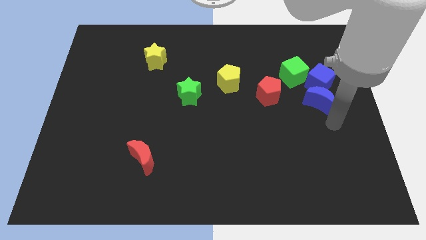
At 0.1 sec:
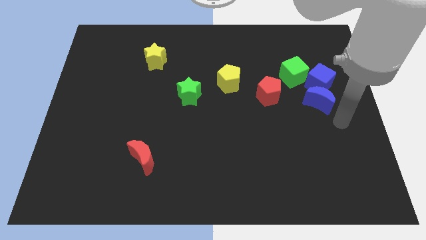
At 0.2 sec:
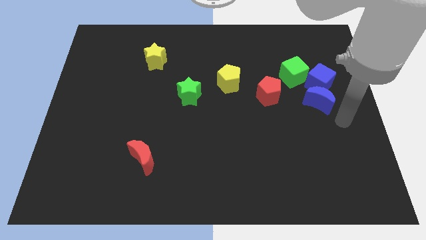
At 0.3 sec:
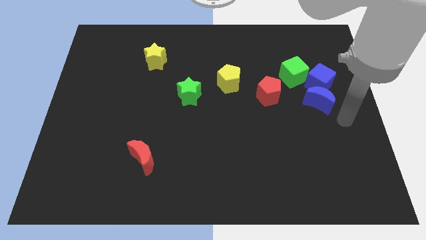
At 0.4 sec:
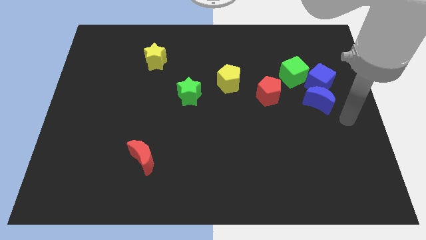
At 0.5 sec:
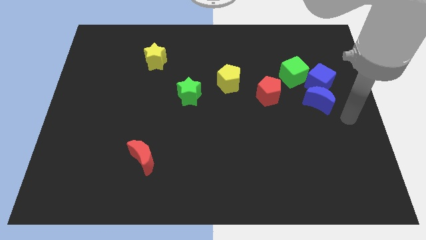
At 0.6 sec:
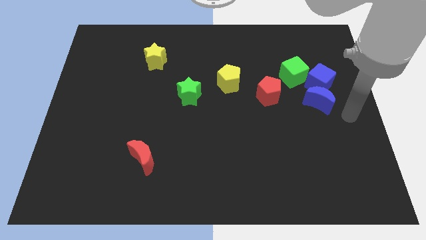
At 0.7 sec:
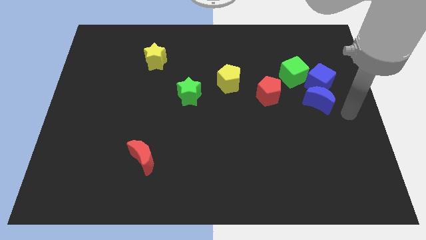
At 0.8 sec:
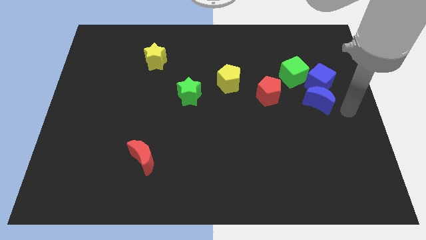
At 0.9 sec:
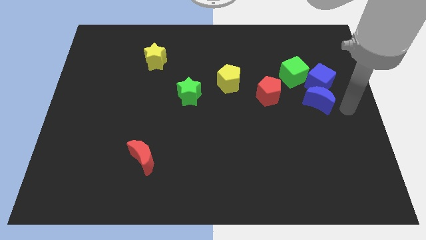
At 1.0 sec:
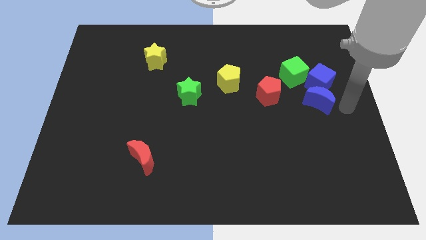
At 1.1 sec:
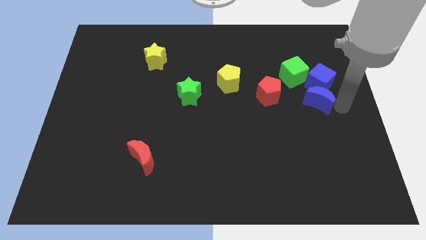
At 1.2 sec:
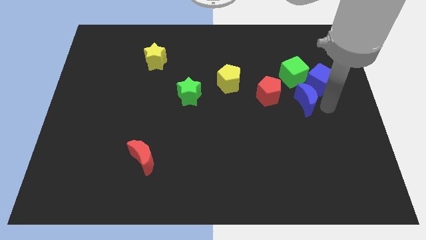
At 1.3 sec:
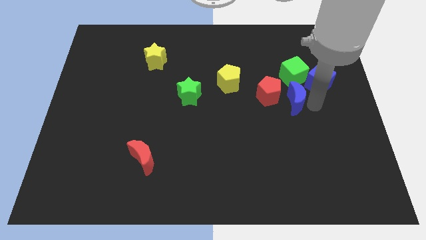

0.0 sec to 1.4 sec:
push blue crescent below green cube

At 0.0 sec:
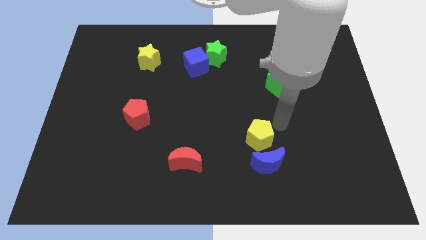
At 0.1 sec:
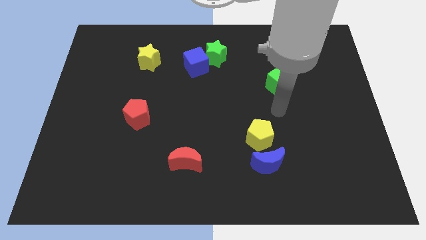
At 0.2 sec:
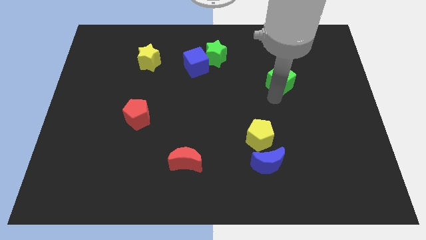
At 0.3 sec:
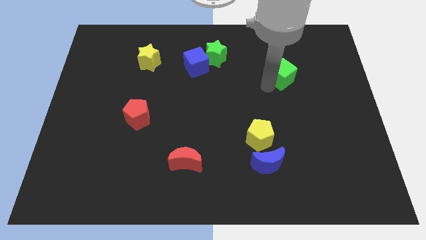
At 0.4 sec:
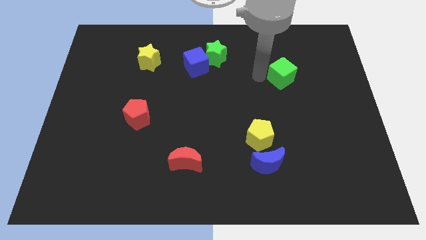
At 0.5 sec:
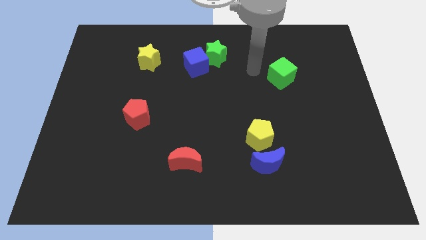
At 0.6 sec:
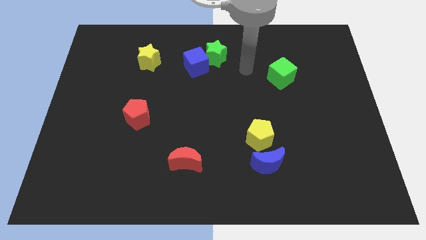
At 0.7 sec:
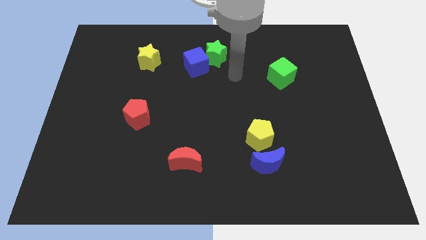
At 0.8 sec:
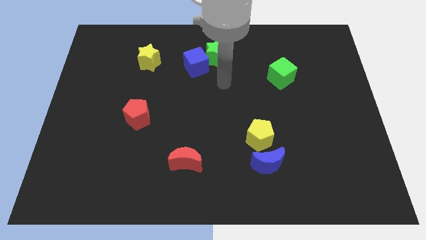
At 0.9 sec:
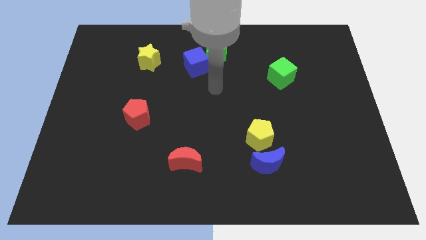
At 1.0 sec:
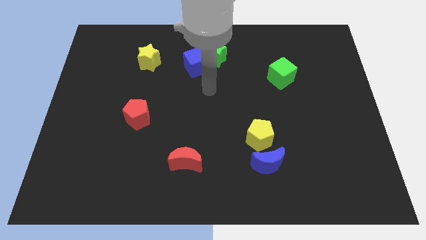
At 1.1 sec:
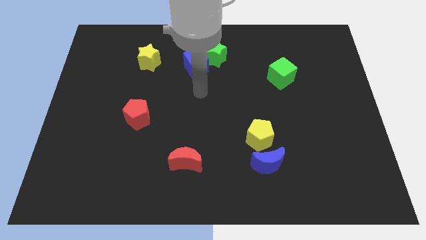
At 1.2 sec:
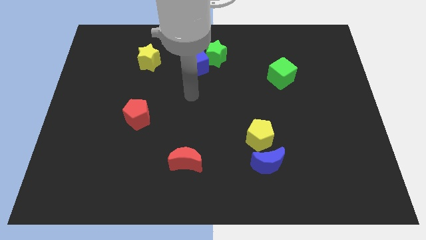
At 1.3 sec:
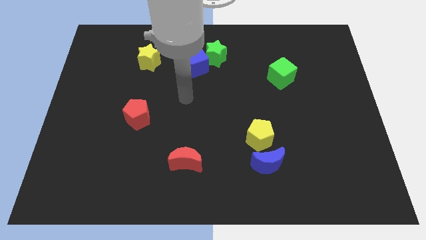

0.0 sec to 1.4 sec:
move the green cube slightly up

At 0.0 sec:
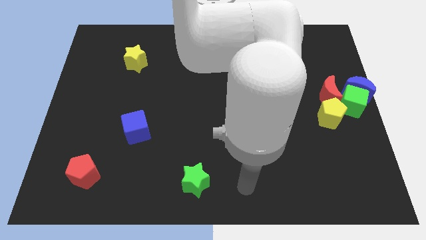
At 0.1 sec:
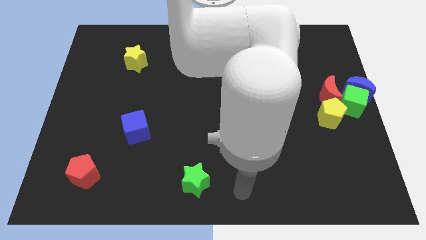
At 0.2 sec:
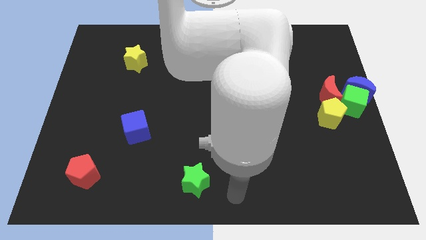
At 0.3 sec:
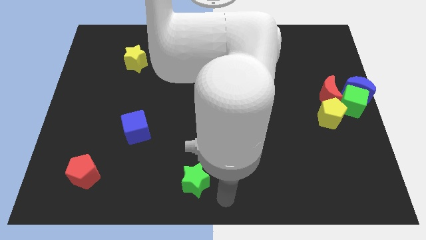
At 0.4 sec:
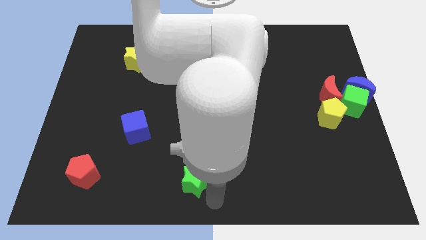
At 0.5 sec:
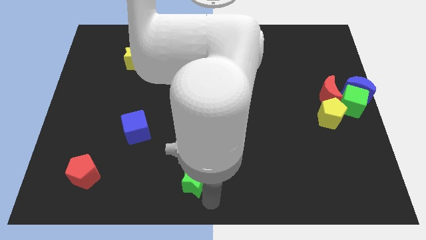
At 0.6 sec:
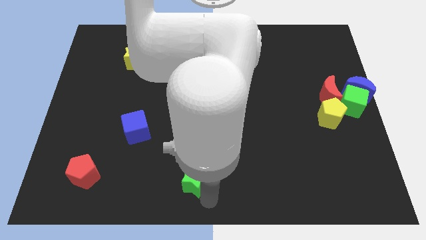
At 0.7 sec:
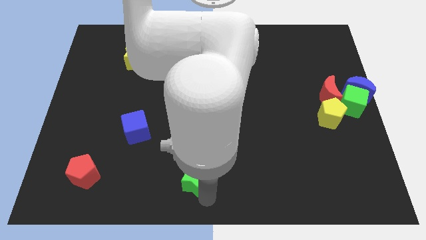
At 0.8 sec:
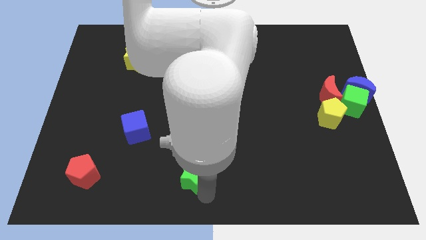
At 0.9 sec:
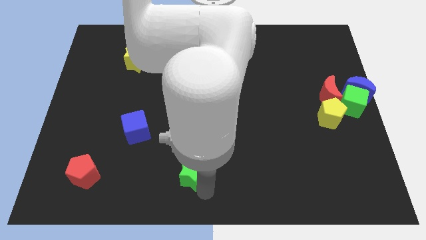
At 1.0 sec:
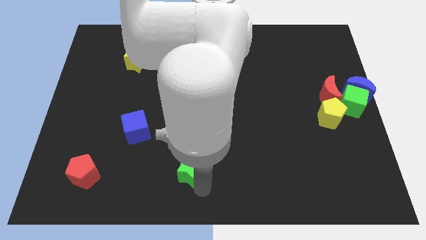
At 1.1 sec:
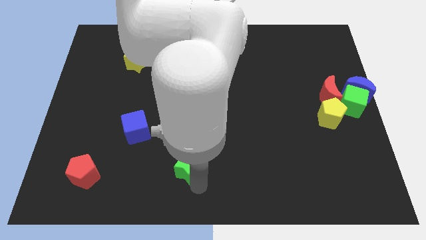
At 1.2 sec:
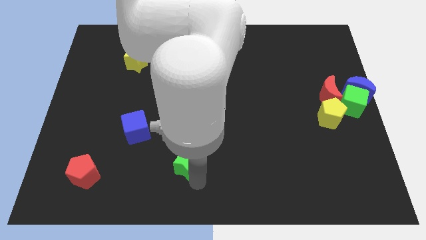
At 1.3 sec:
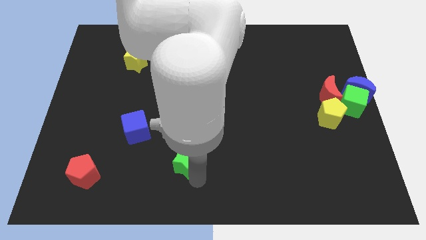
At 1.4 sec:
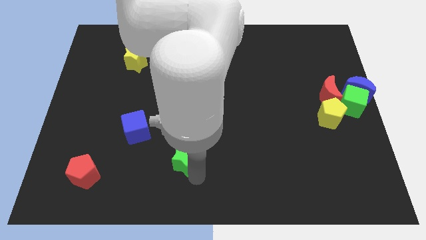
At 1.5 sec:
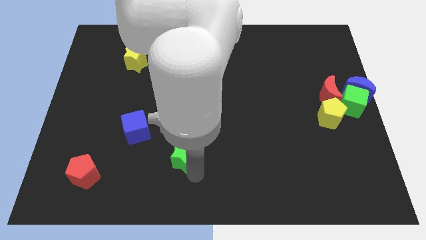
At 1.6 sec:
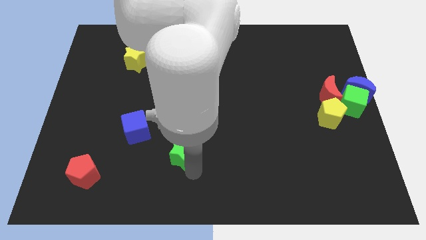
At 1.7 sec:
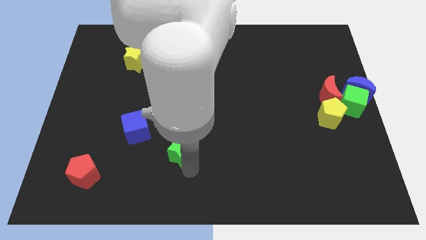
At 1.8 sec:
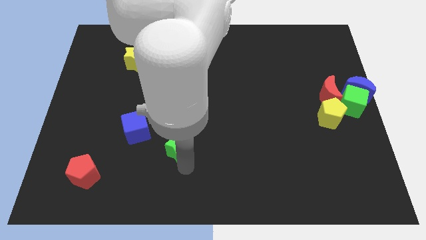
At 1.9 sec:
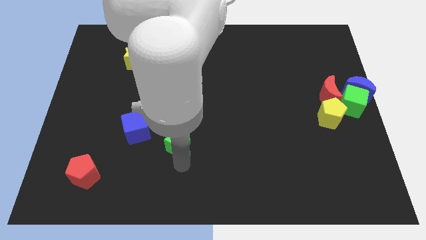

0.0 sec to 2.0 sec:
move the green star diagonally to red pentagon

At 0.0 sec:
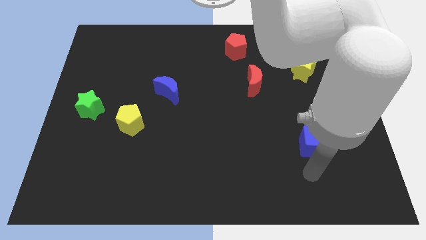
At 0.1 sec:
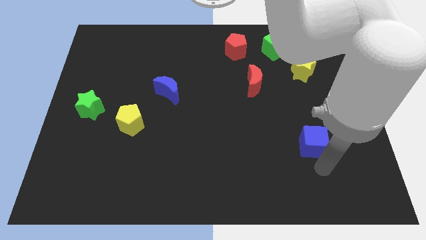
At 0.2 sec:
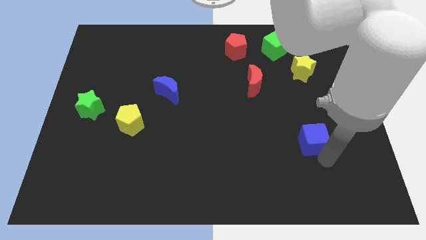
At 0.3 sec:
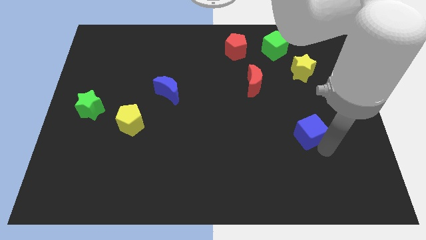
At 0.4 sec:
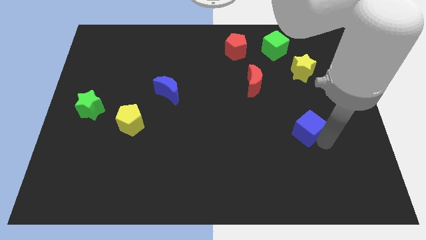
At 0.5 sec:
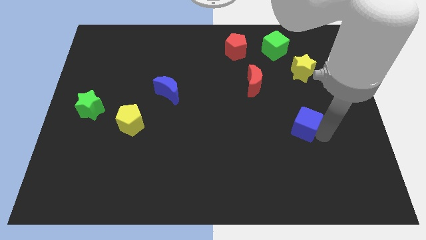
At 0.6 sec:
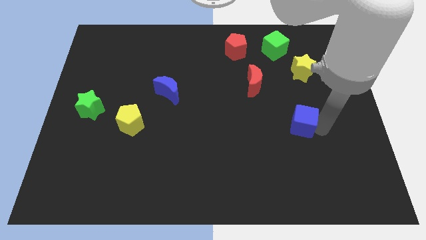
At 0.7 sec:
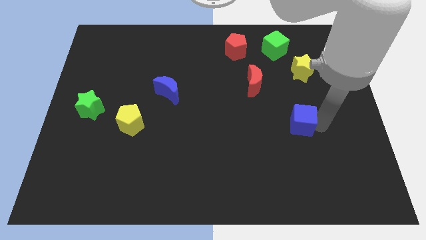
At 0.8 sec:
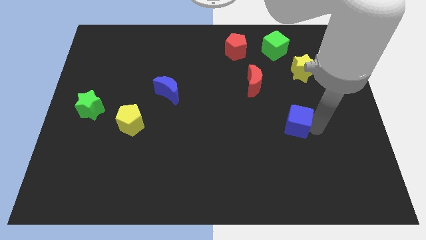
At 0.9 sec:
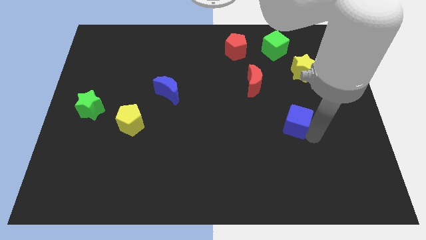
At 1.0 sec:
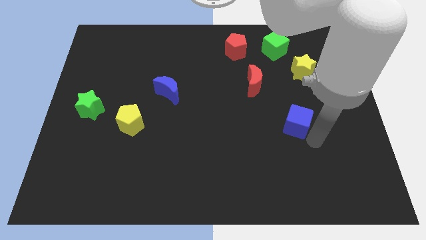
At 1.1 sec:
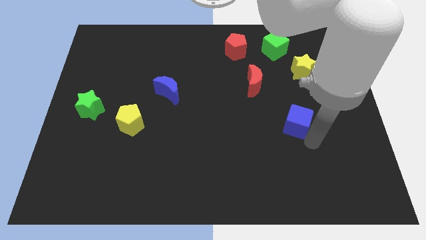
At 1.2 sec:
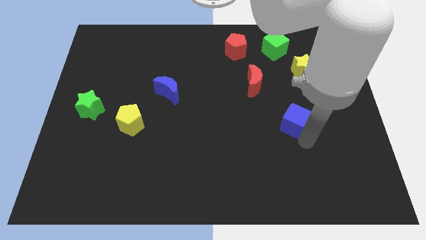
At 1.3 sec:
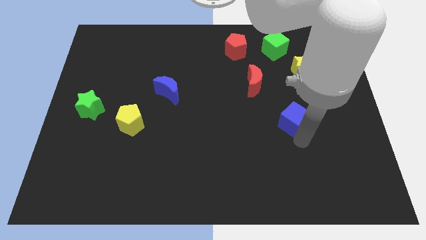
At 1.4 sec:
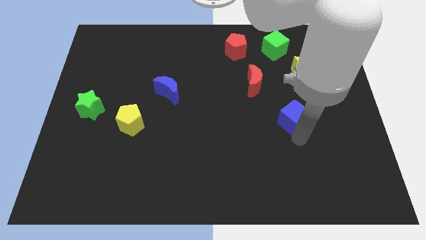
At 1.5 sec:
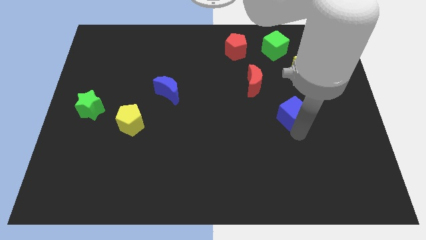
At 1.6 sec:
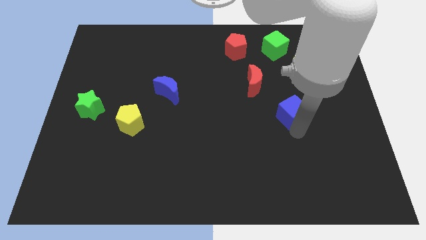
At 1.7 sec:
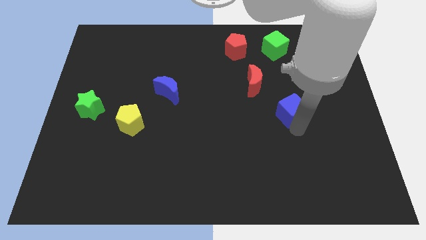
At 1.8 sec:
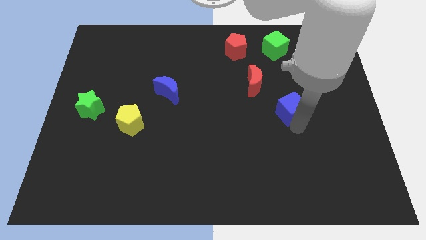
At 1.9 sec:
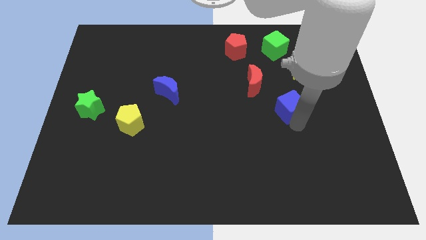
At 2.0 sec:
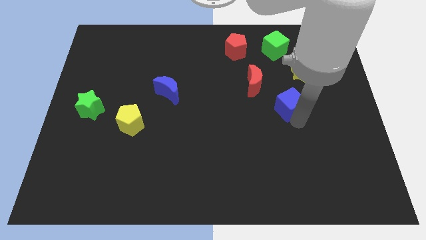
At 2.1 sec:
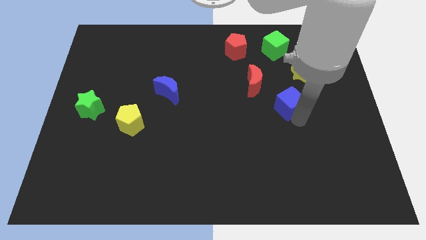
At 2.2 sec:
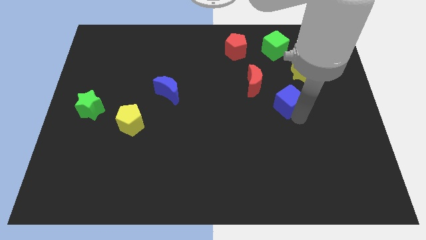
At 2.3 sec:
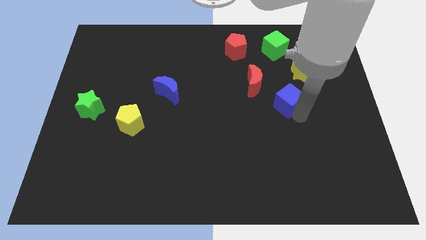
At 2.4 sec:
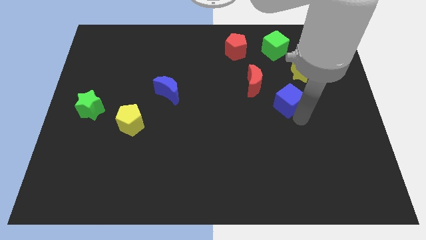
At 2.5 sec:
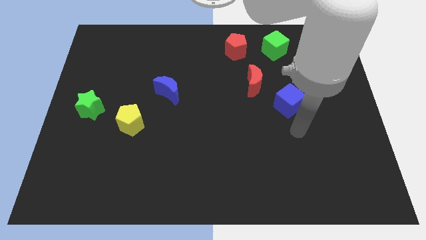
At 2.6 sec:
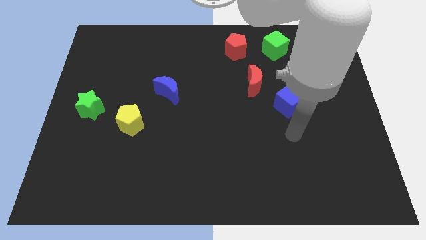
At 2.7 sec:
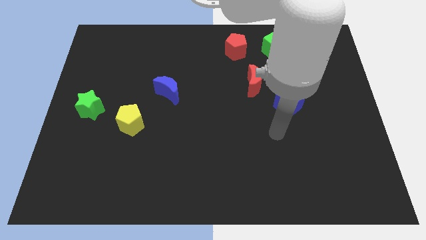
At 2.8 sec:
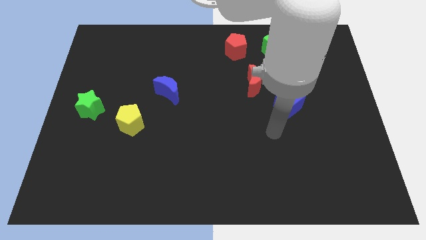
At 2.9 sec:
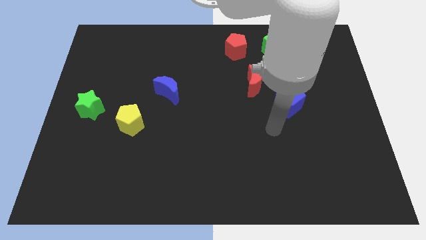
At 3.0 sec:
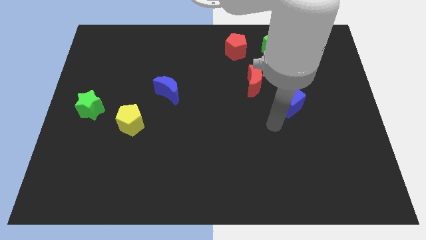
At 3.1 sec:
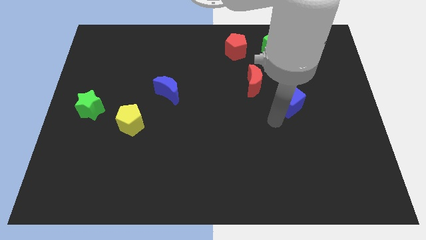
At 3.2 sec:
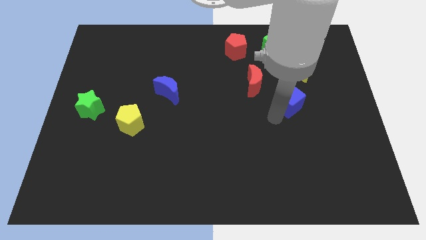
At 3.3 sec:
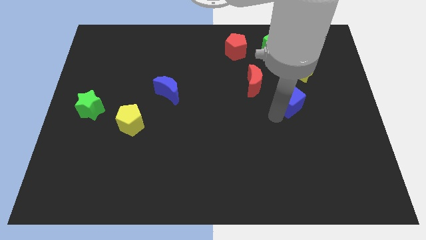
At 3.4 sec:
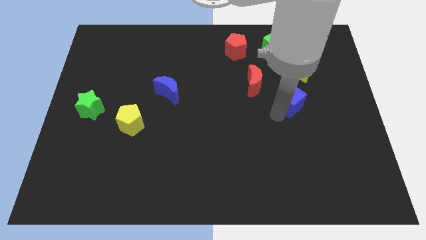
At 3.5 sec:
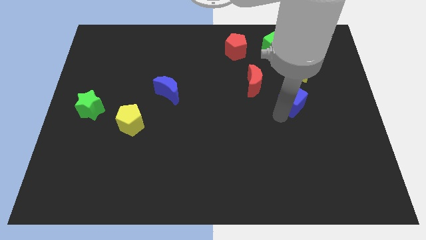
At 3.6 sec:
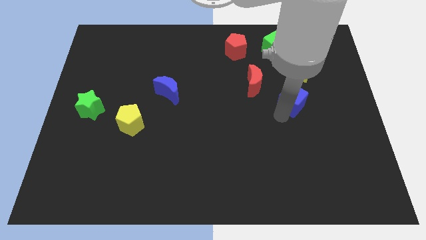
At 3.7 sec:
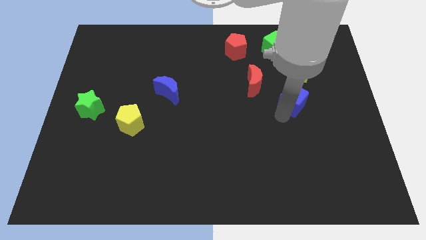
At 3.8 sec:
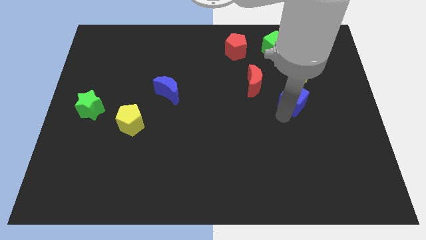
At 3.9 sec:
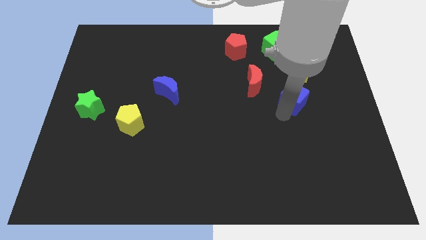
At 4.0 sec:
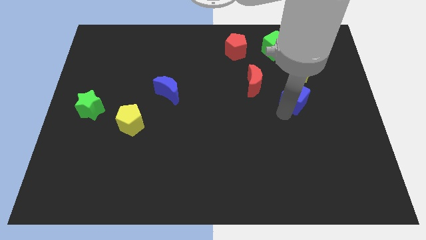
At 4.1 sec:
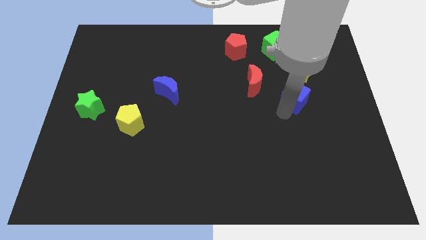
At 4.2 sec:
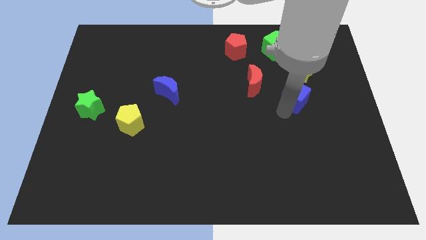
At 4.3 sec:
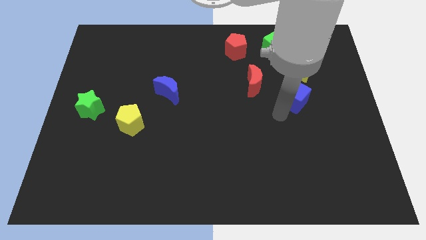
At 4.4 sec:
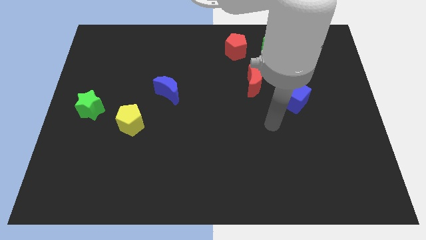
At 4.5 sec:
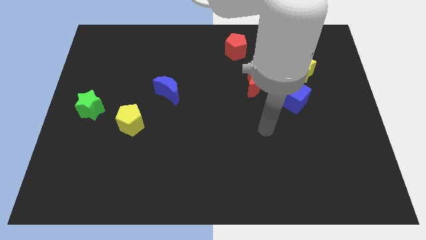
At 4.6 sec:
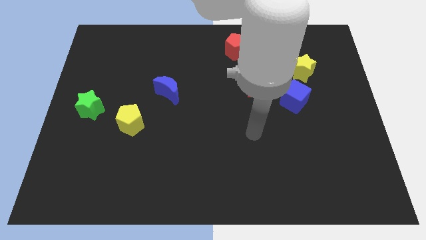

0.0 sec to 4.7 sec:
push the blue cube into the yellow star
